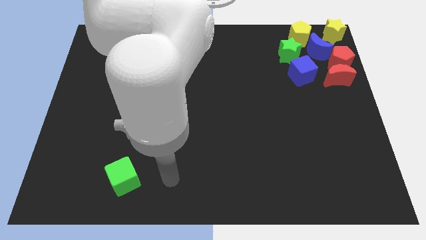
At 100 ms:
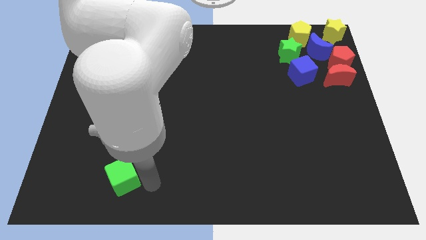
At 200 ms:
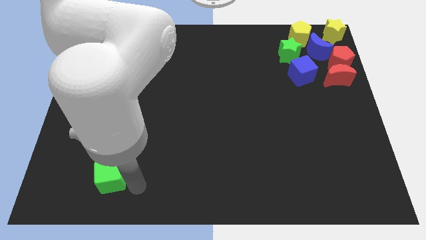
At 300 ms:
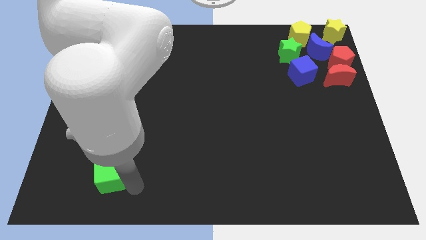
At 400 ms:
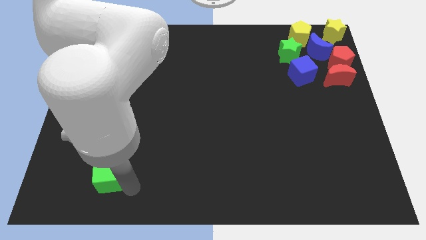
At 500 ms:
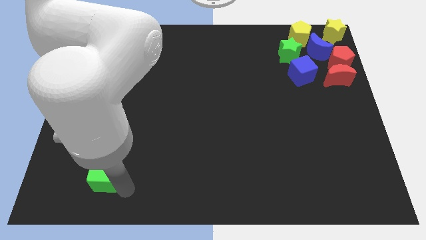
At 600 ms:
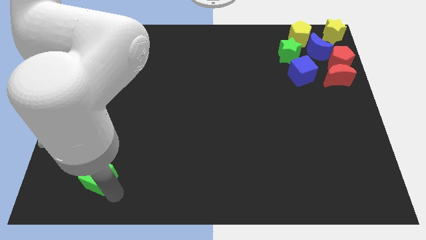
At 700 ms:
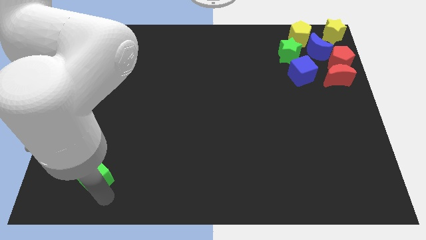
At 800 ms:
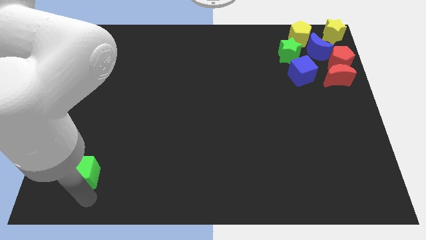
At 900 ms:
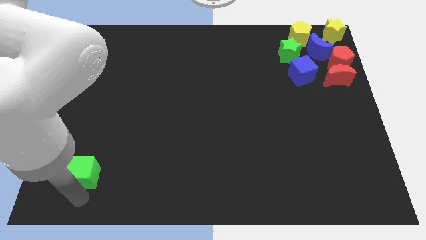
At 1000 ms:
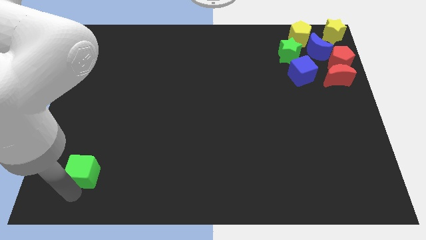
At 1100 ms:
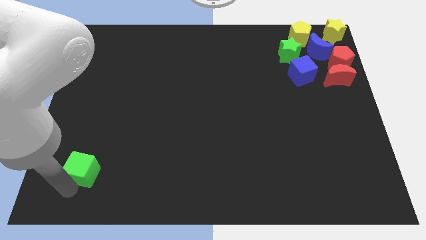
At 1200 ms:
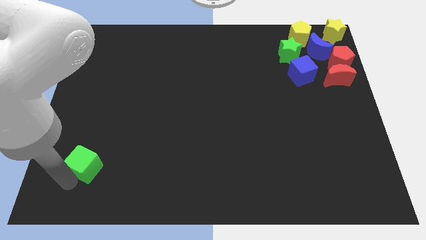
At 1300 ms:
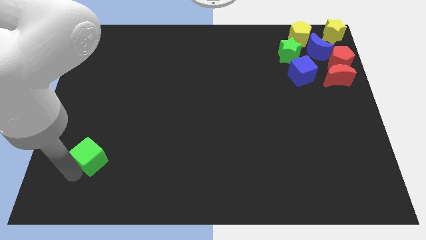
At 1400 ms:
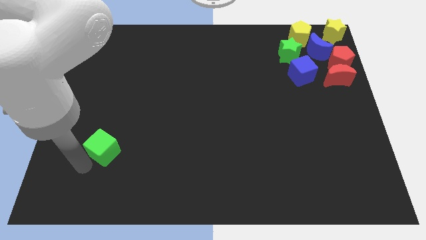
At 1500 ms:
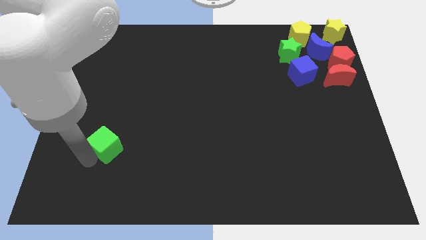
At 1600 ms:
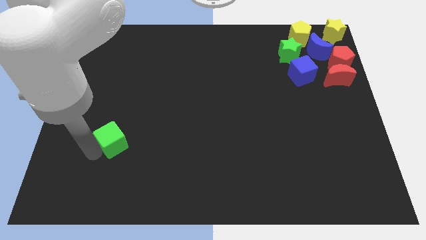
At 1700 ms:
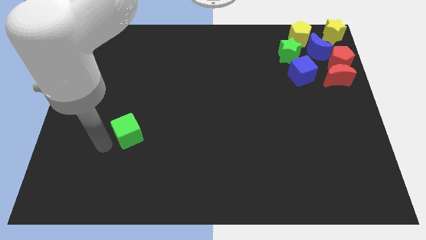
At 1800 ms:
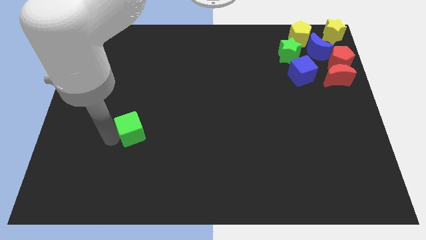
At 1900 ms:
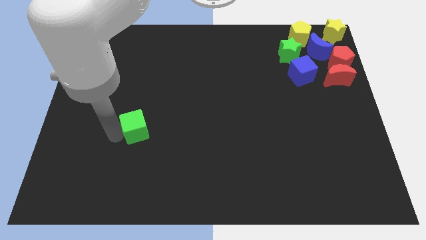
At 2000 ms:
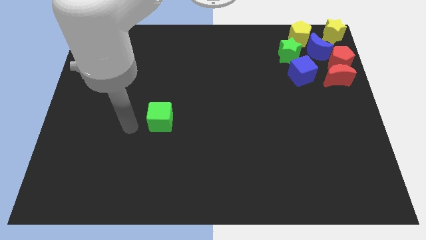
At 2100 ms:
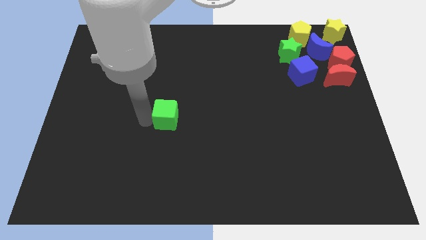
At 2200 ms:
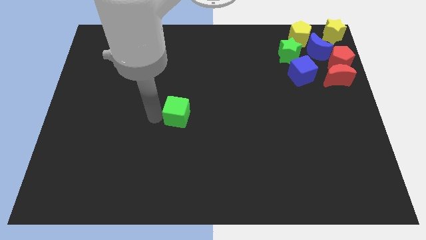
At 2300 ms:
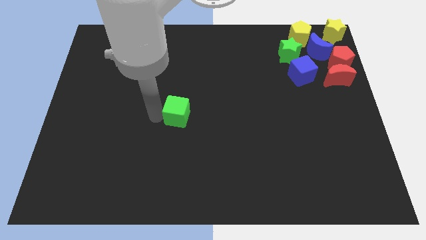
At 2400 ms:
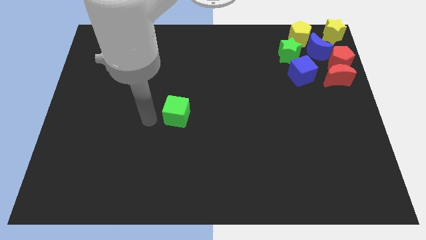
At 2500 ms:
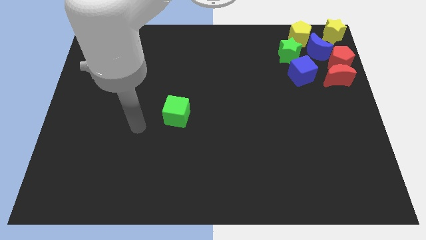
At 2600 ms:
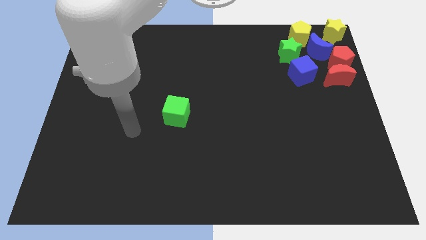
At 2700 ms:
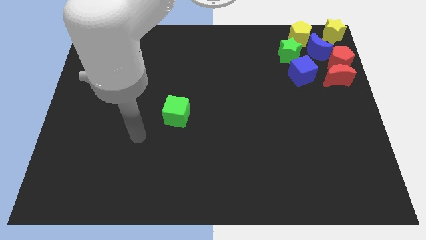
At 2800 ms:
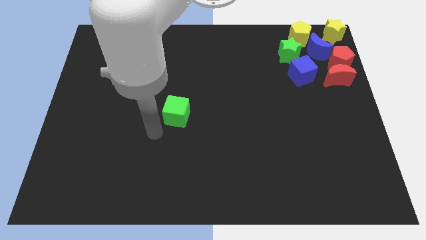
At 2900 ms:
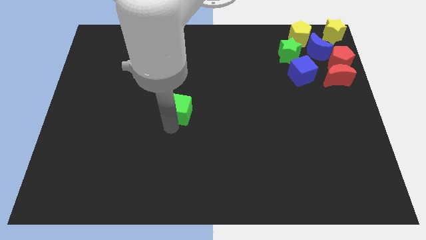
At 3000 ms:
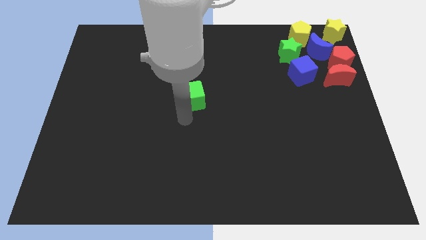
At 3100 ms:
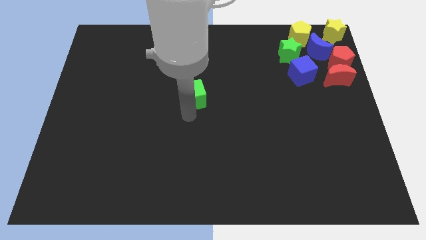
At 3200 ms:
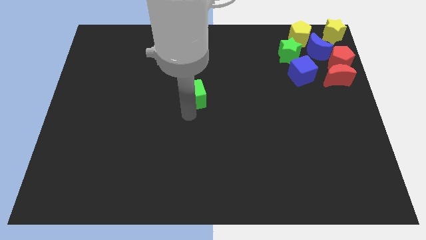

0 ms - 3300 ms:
place the green cube towards the center of the board

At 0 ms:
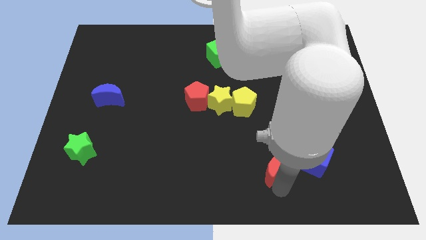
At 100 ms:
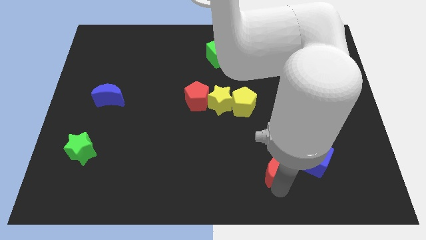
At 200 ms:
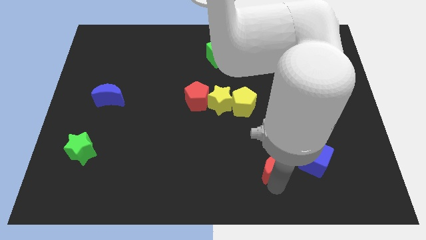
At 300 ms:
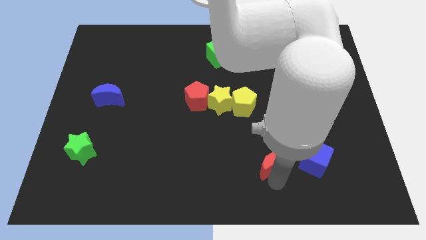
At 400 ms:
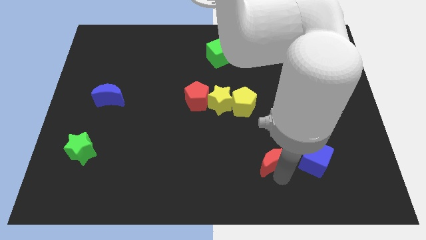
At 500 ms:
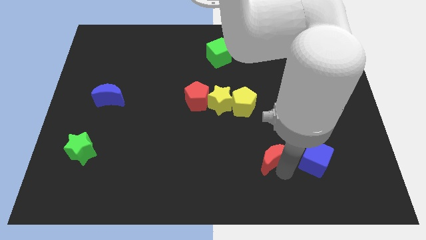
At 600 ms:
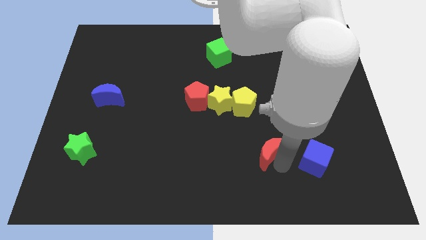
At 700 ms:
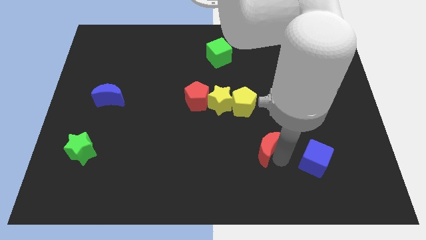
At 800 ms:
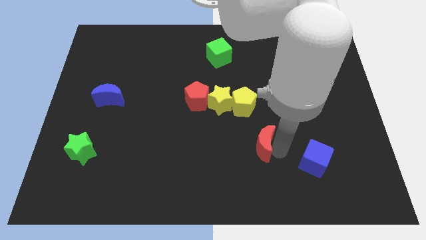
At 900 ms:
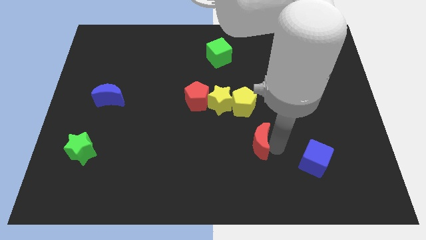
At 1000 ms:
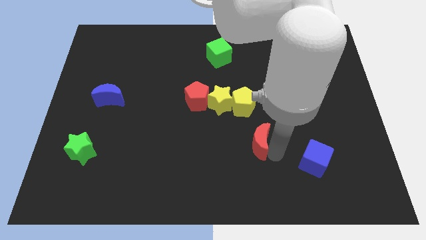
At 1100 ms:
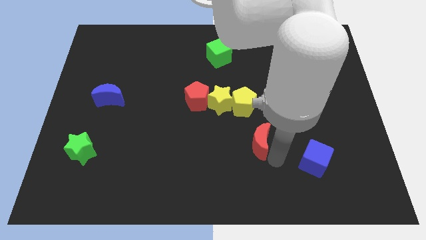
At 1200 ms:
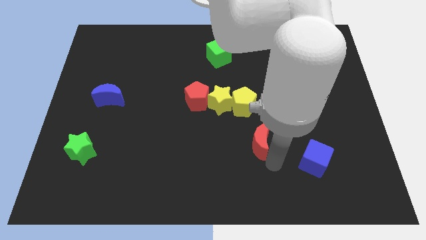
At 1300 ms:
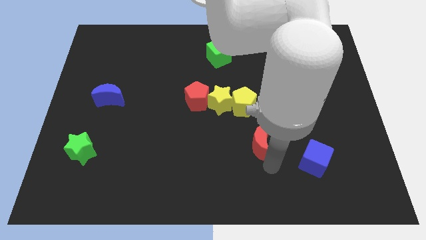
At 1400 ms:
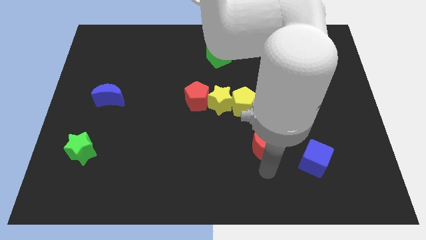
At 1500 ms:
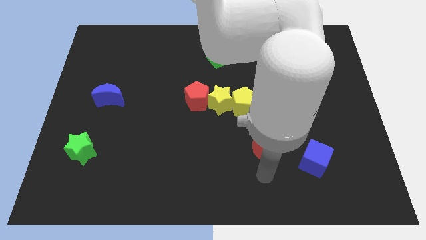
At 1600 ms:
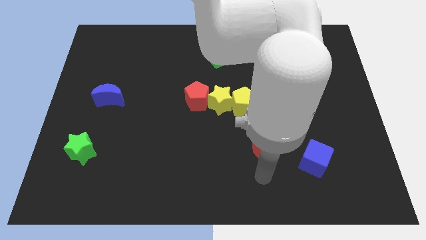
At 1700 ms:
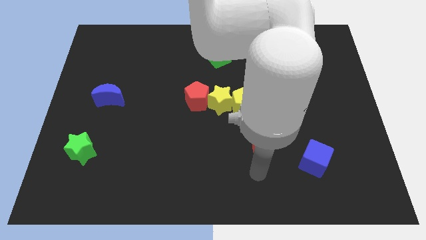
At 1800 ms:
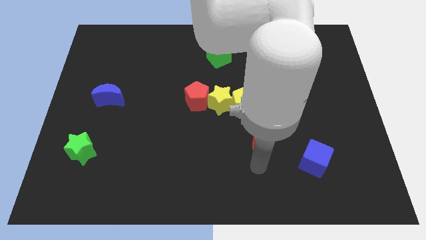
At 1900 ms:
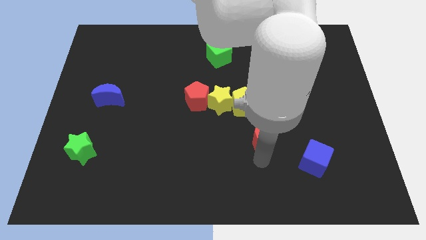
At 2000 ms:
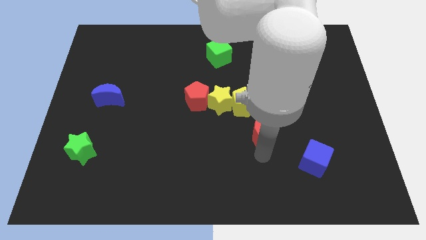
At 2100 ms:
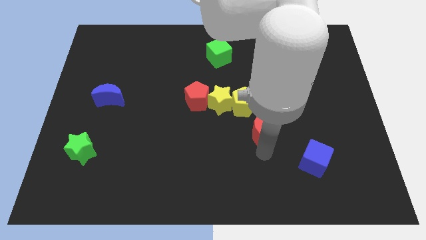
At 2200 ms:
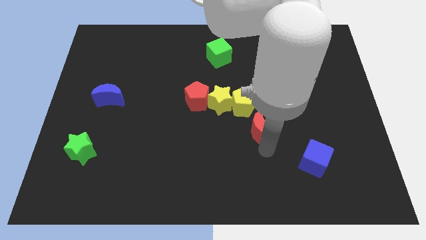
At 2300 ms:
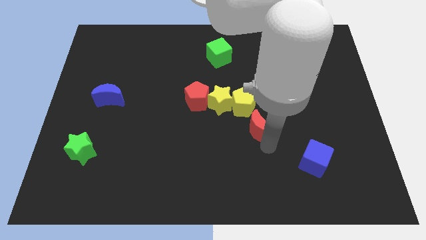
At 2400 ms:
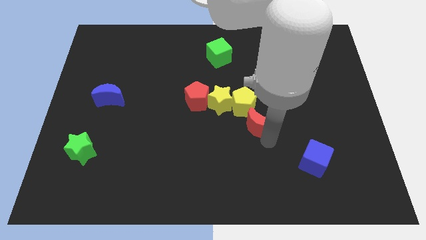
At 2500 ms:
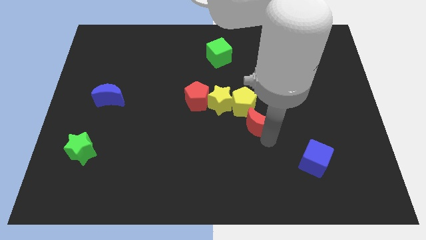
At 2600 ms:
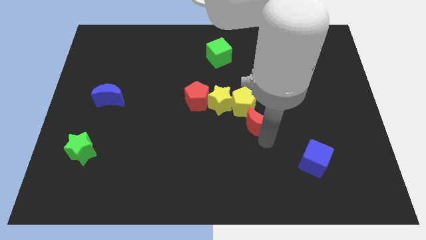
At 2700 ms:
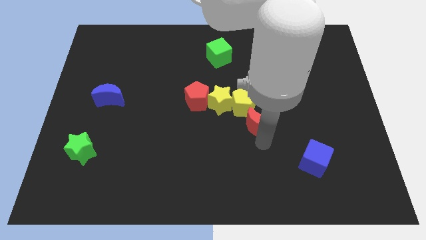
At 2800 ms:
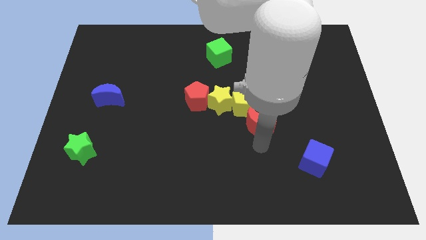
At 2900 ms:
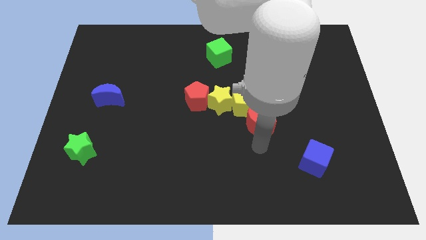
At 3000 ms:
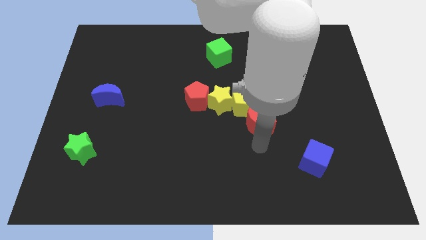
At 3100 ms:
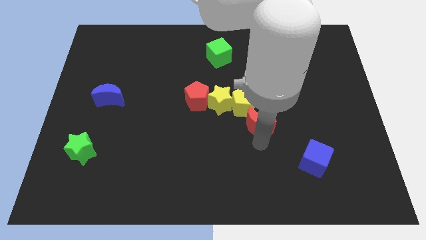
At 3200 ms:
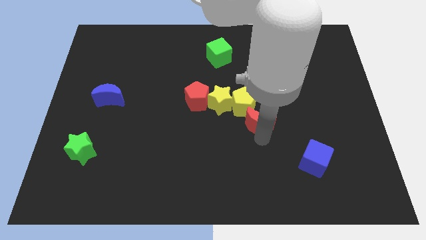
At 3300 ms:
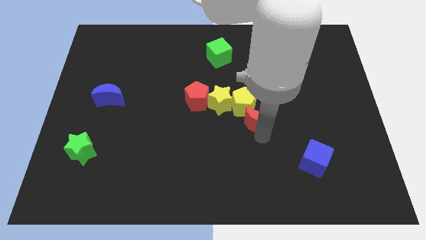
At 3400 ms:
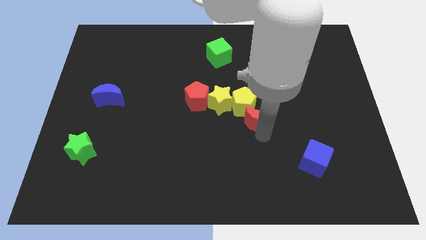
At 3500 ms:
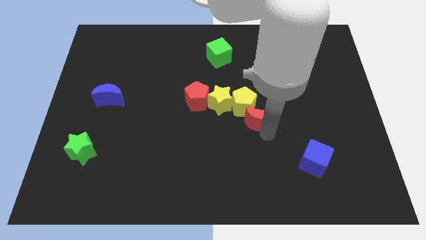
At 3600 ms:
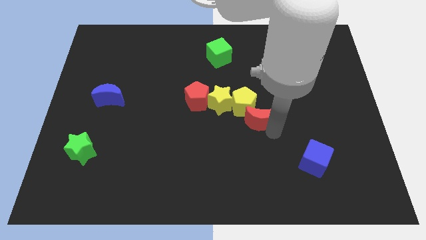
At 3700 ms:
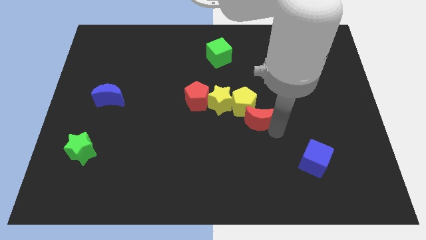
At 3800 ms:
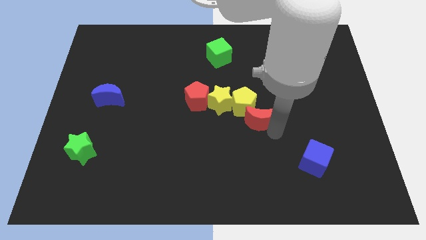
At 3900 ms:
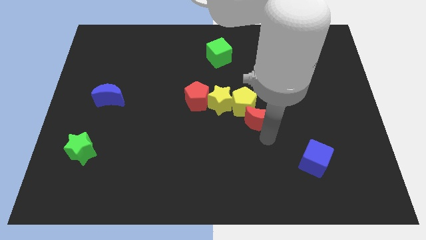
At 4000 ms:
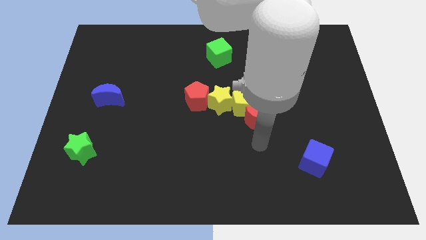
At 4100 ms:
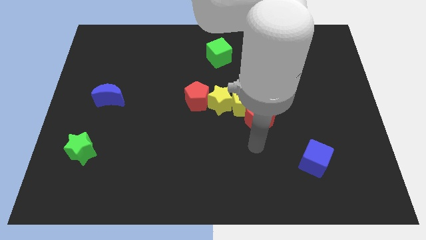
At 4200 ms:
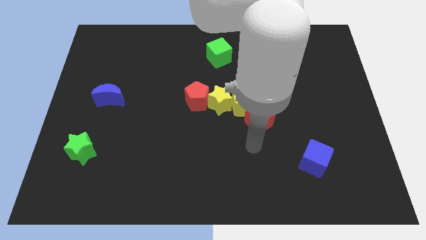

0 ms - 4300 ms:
move red crescent into yellow pentagon

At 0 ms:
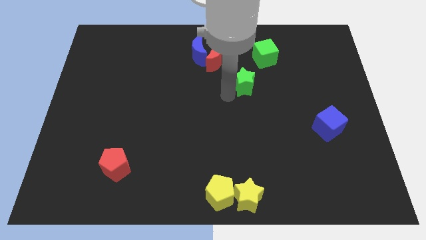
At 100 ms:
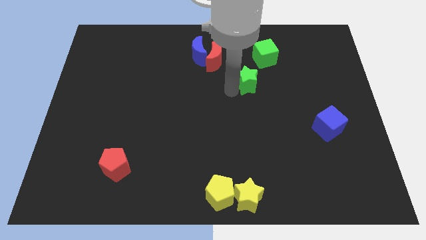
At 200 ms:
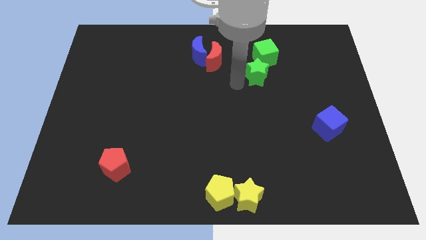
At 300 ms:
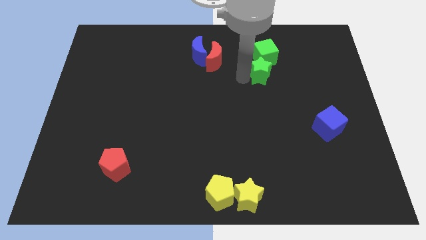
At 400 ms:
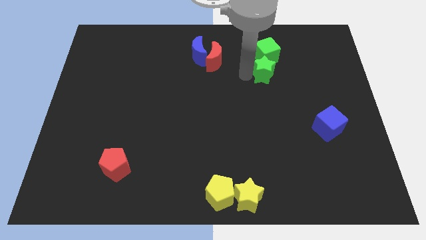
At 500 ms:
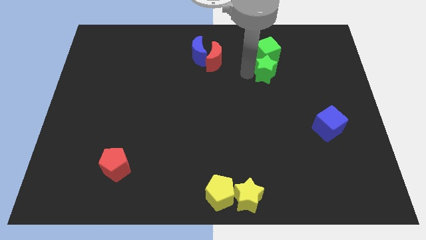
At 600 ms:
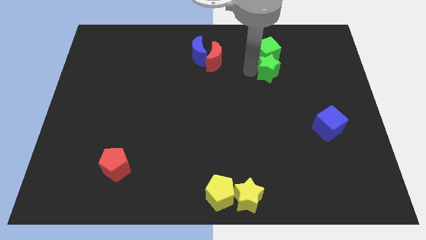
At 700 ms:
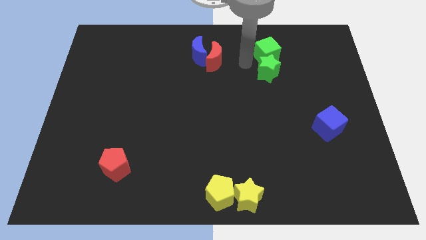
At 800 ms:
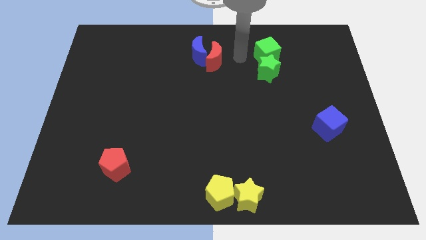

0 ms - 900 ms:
push the green star into the green cube

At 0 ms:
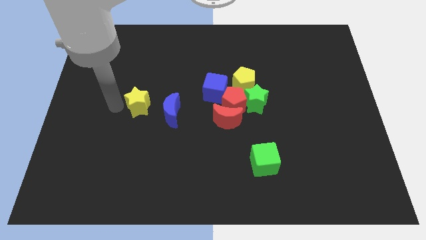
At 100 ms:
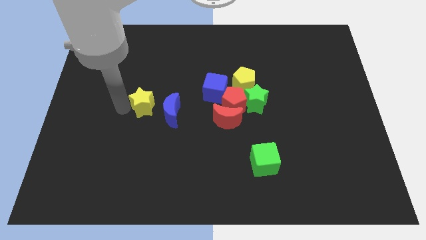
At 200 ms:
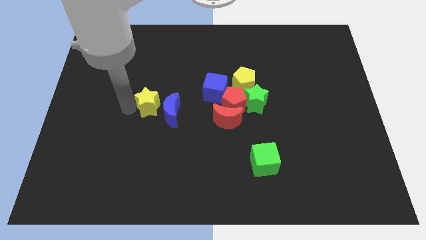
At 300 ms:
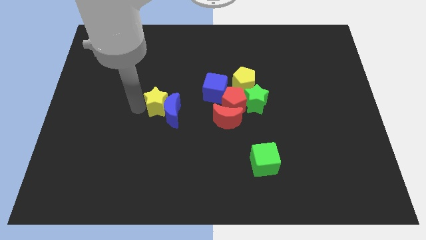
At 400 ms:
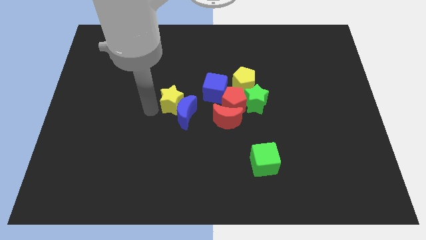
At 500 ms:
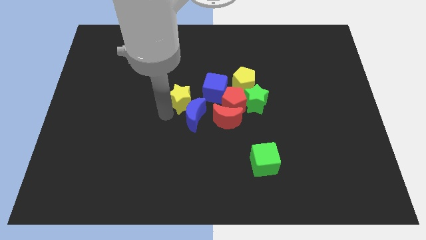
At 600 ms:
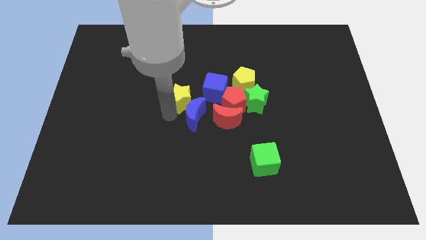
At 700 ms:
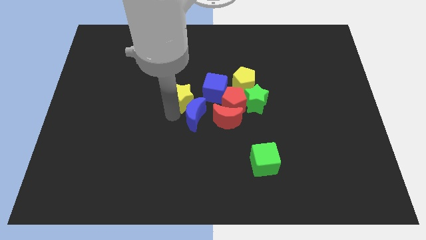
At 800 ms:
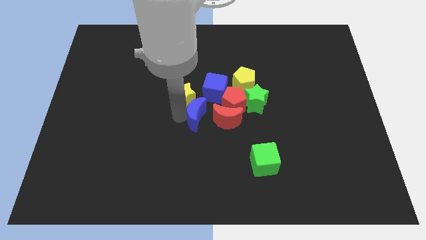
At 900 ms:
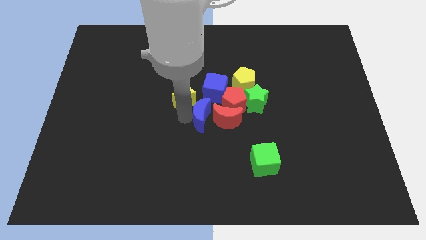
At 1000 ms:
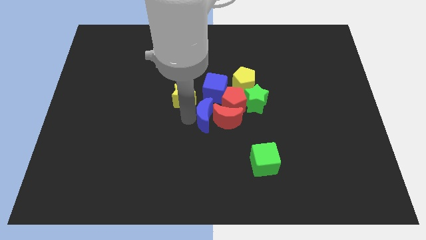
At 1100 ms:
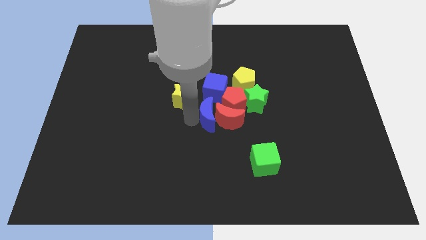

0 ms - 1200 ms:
push the yellow star close to the blue crescent
